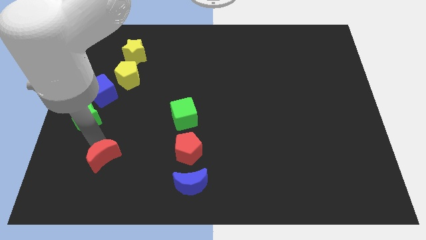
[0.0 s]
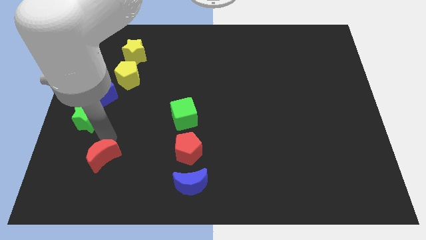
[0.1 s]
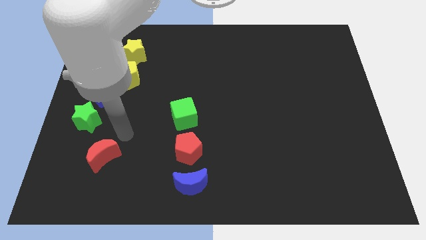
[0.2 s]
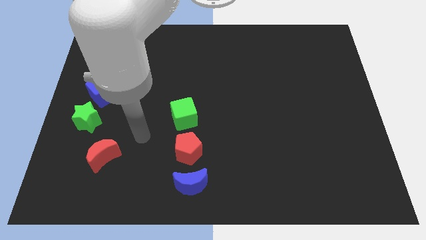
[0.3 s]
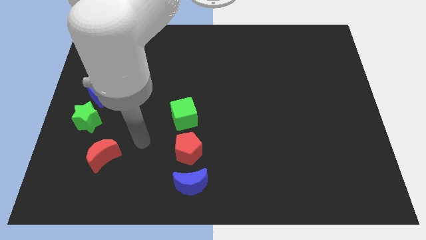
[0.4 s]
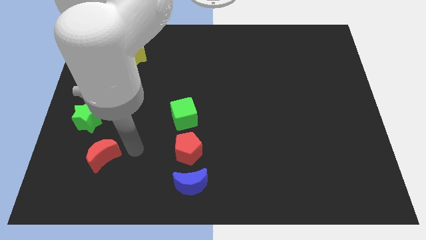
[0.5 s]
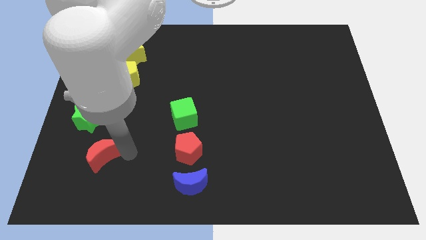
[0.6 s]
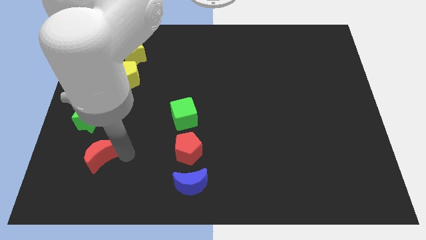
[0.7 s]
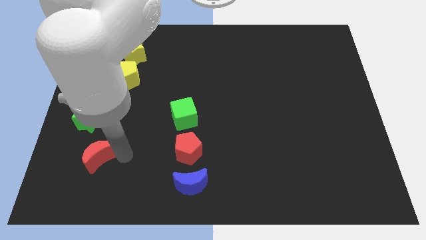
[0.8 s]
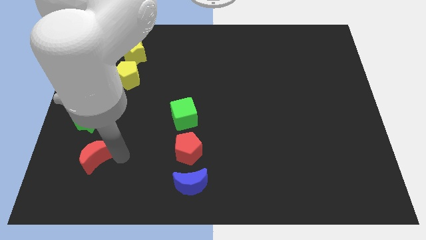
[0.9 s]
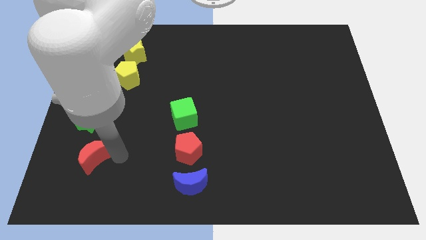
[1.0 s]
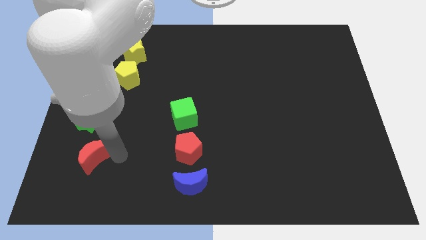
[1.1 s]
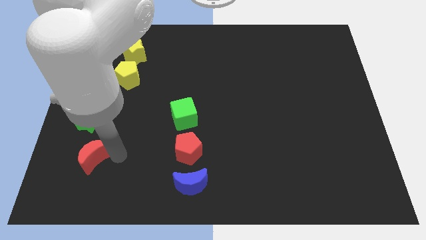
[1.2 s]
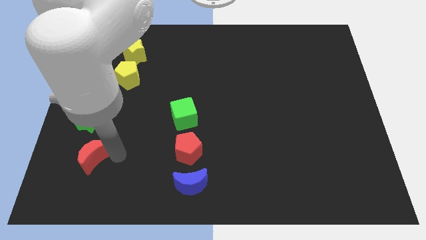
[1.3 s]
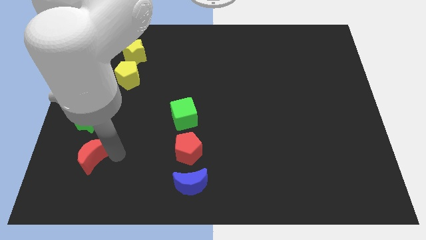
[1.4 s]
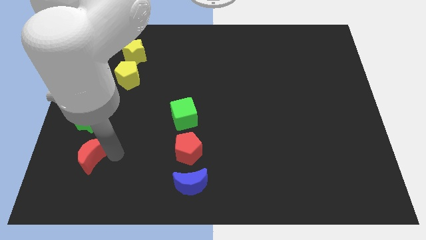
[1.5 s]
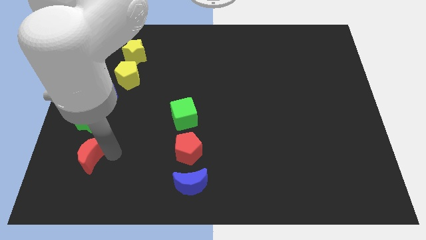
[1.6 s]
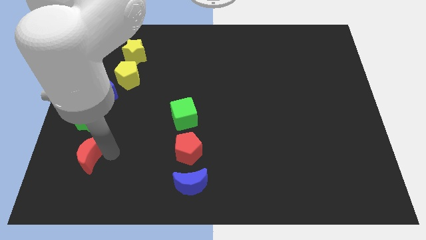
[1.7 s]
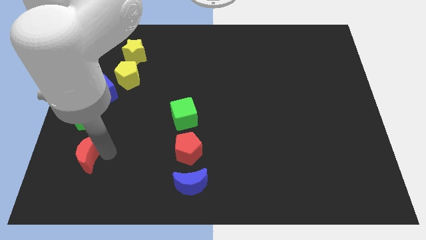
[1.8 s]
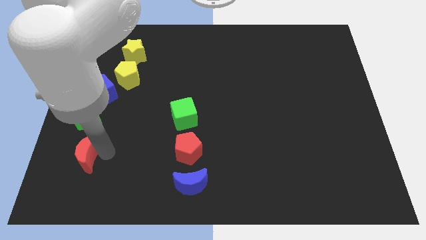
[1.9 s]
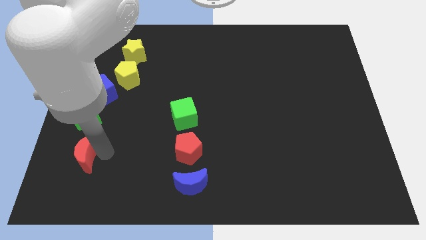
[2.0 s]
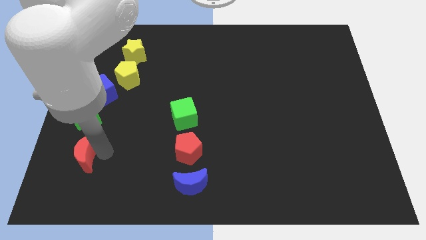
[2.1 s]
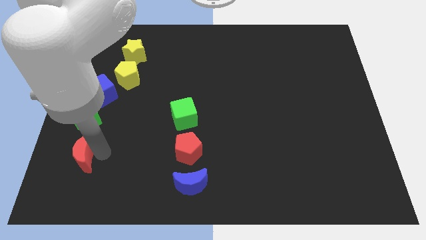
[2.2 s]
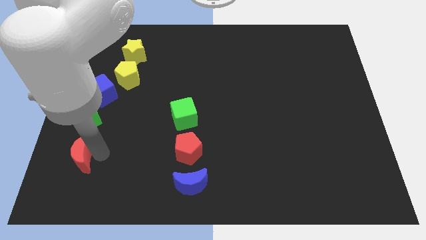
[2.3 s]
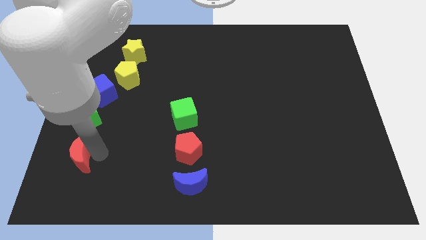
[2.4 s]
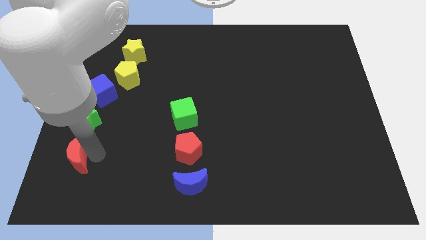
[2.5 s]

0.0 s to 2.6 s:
put the red crescent at the bottom of green star

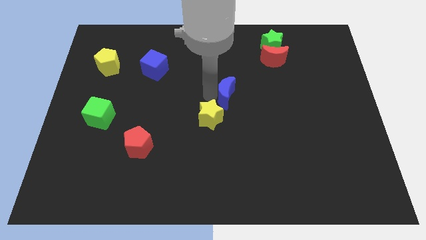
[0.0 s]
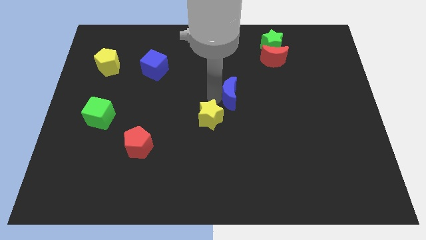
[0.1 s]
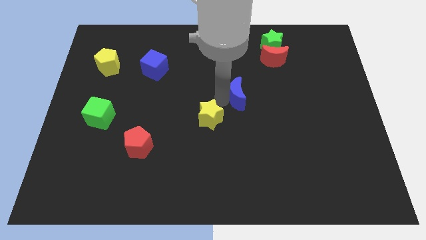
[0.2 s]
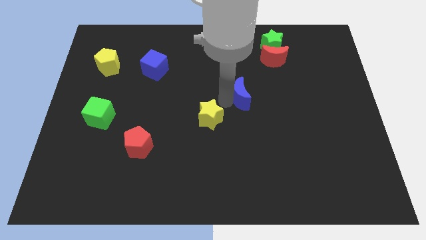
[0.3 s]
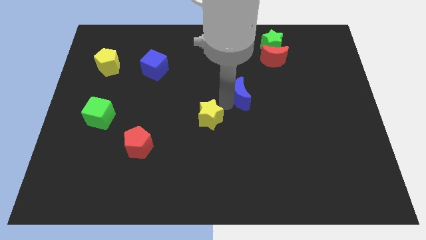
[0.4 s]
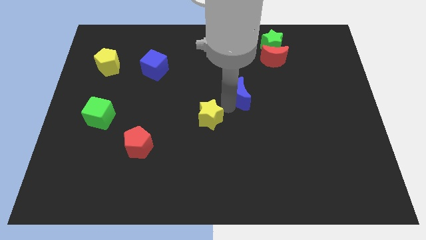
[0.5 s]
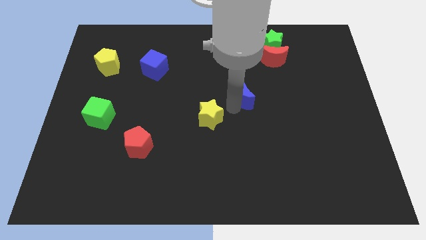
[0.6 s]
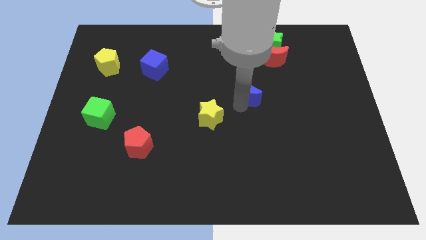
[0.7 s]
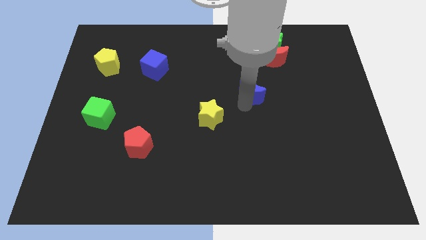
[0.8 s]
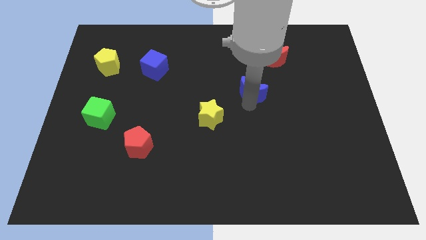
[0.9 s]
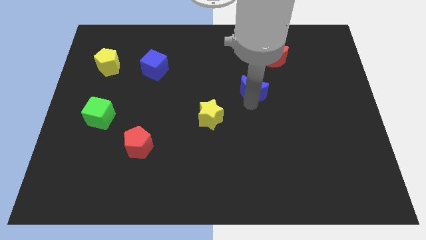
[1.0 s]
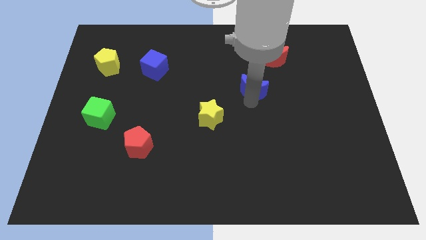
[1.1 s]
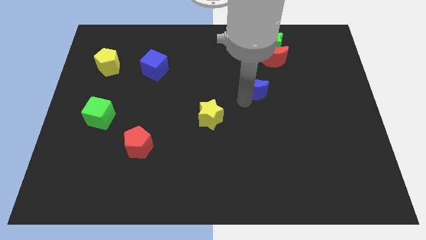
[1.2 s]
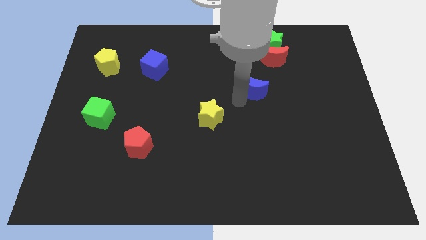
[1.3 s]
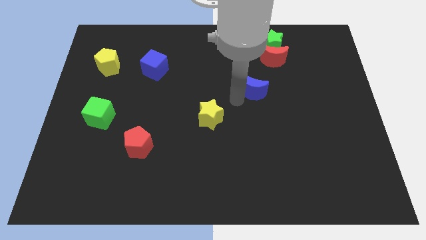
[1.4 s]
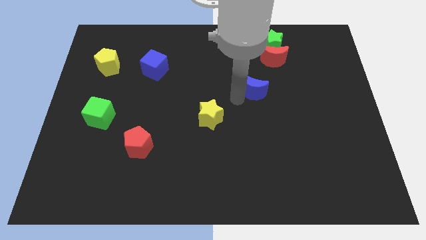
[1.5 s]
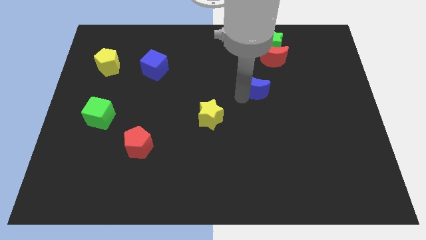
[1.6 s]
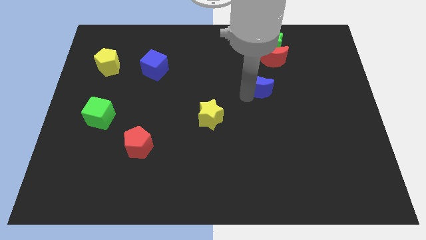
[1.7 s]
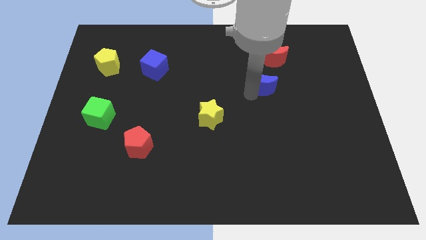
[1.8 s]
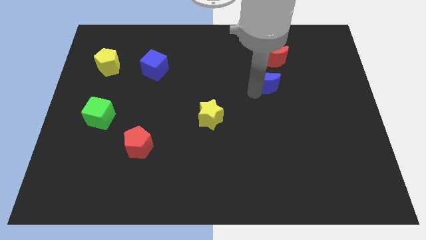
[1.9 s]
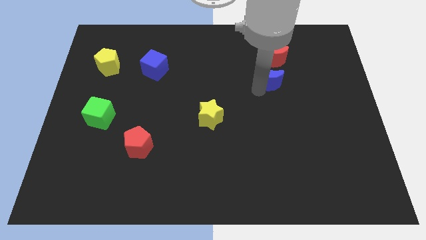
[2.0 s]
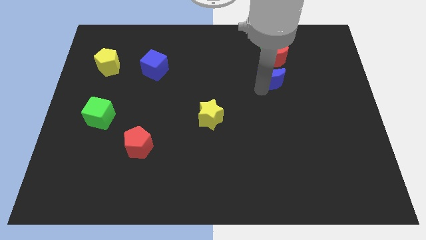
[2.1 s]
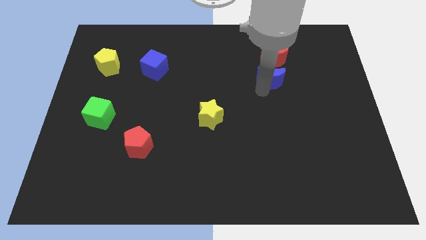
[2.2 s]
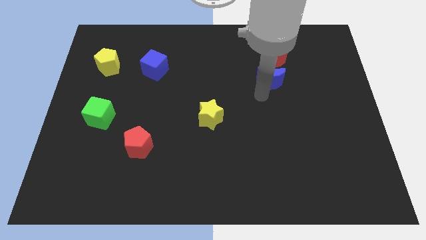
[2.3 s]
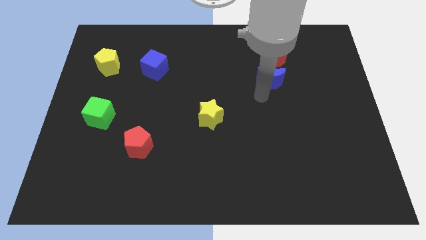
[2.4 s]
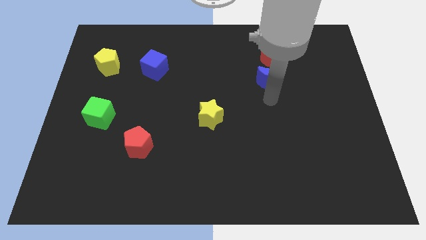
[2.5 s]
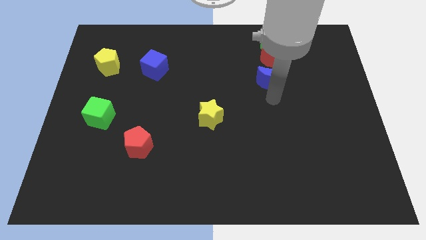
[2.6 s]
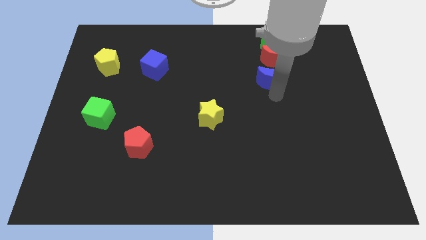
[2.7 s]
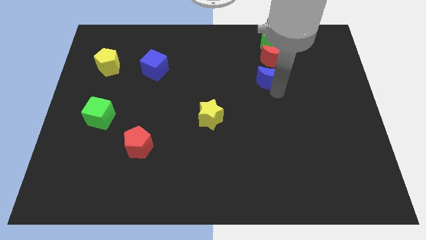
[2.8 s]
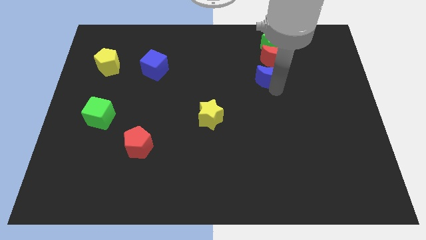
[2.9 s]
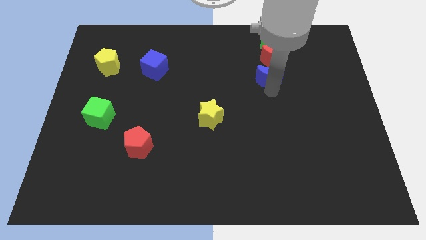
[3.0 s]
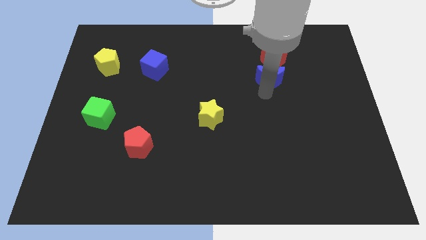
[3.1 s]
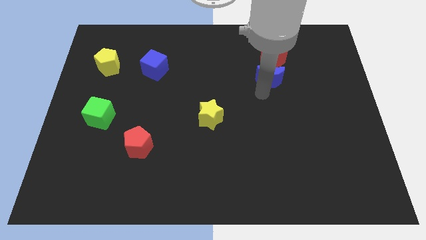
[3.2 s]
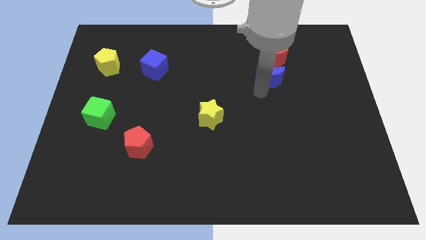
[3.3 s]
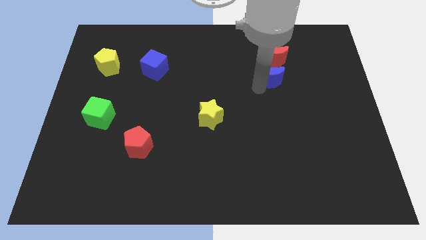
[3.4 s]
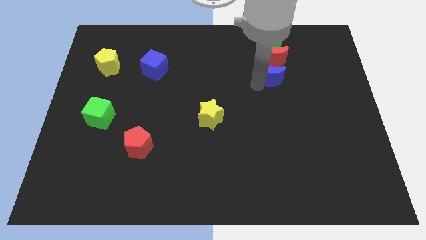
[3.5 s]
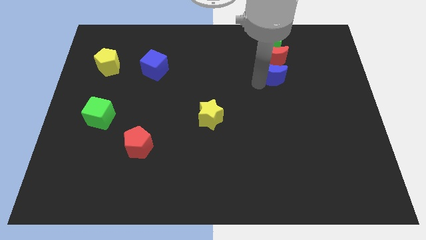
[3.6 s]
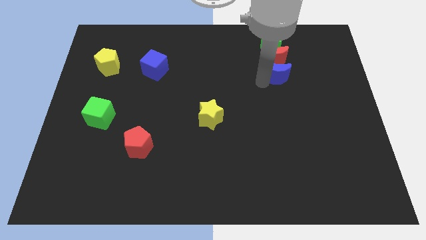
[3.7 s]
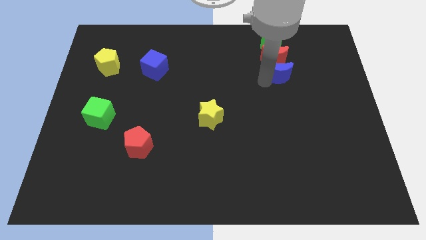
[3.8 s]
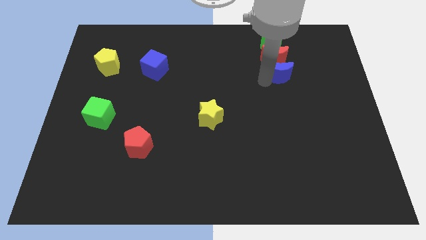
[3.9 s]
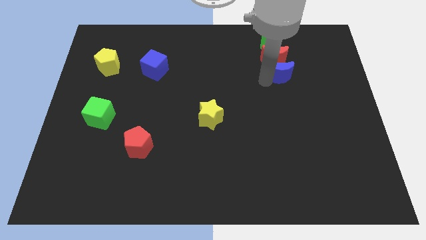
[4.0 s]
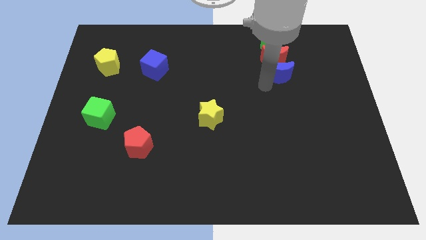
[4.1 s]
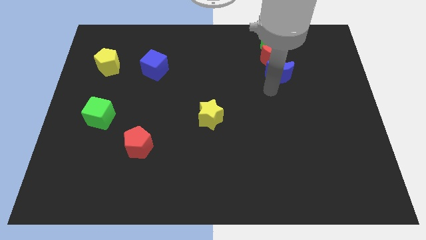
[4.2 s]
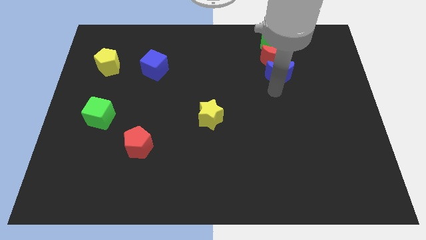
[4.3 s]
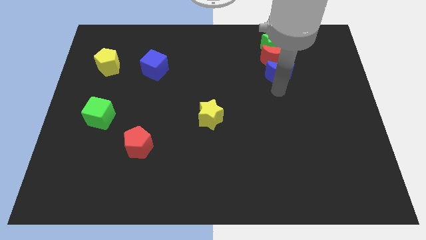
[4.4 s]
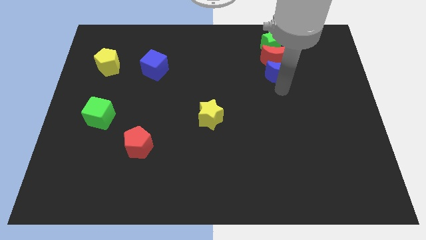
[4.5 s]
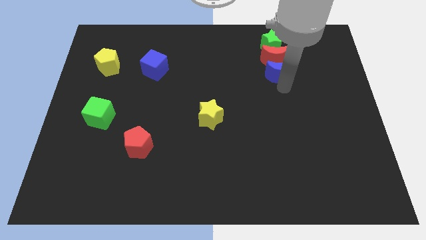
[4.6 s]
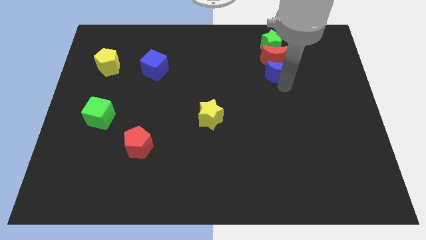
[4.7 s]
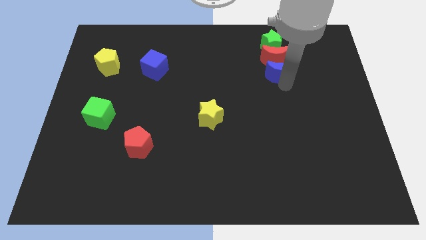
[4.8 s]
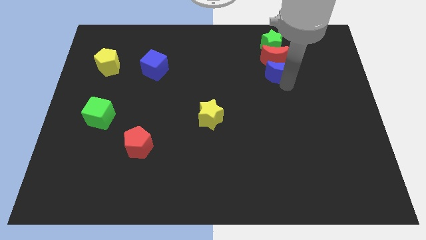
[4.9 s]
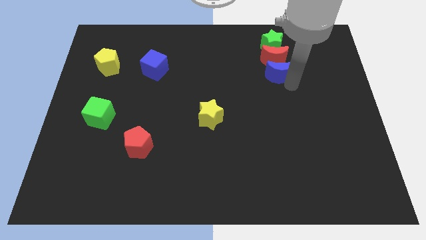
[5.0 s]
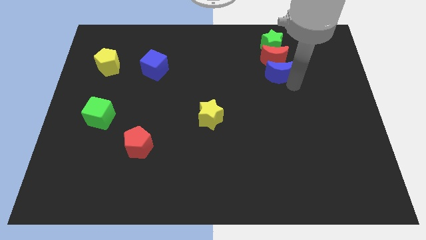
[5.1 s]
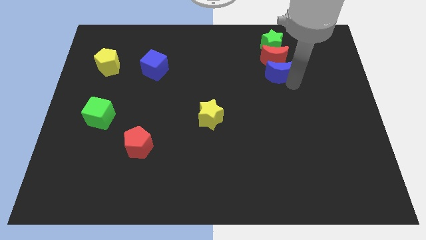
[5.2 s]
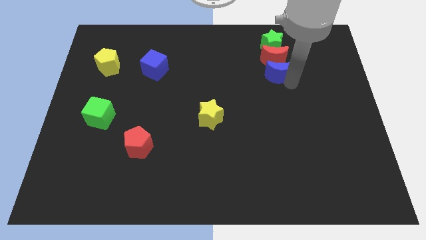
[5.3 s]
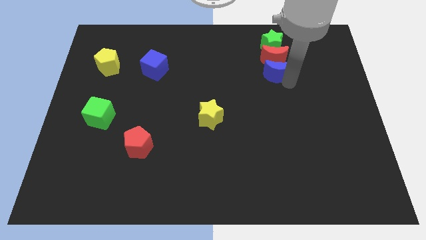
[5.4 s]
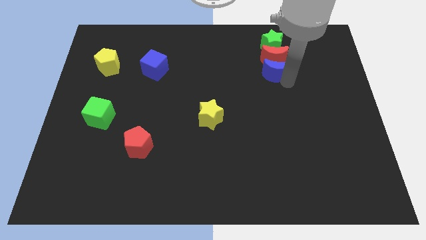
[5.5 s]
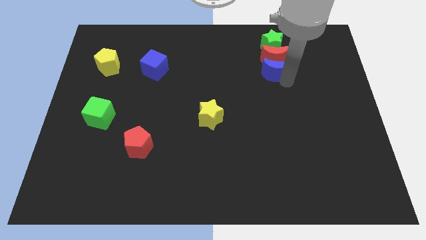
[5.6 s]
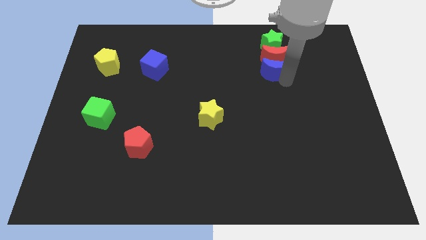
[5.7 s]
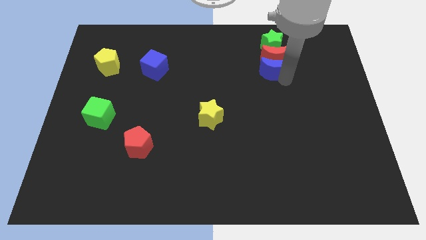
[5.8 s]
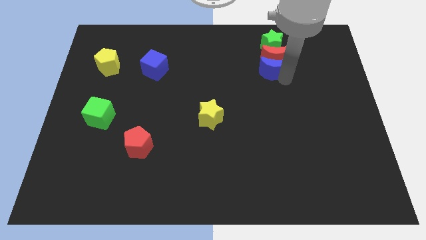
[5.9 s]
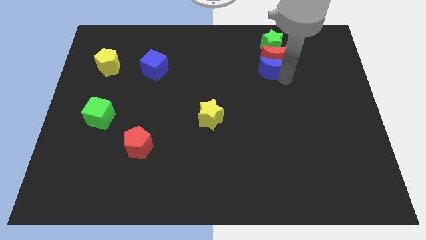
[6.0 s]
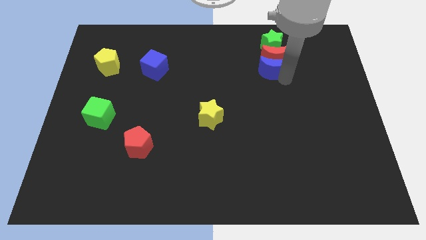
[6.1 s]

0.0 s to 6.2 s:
place the blue crescent below the red crescent
